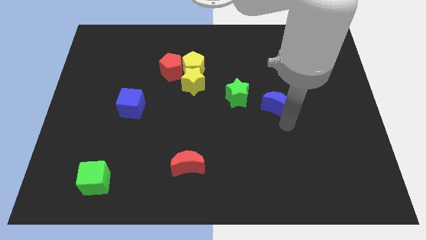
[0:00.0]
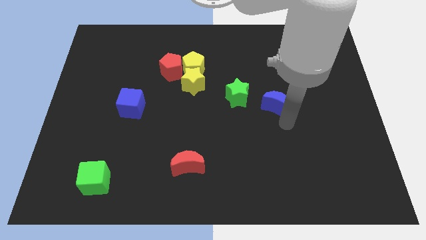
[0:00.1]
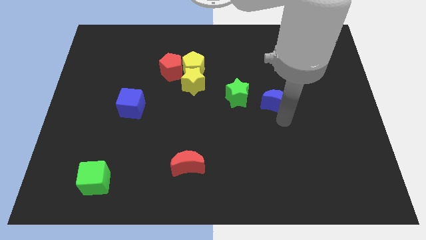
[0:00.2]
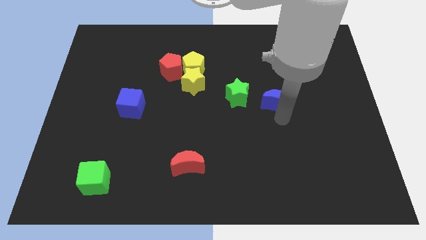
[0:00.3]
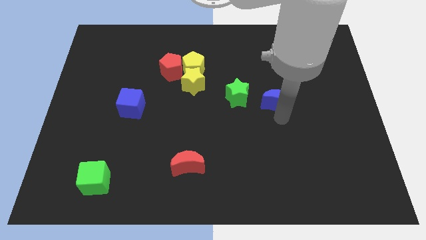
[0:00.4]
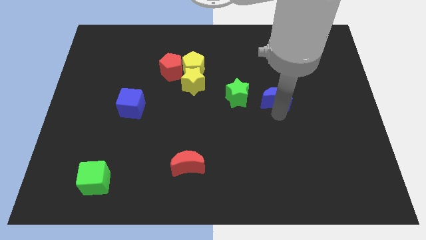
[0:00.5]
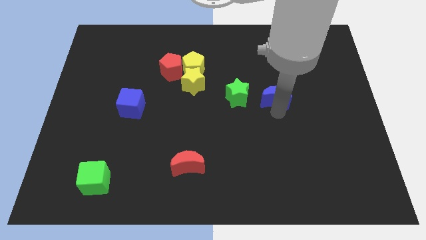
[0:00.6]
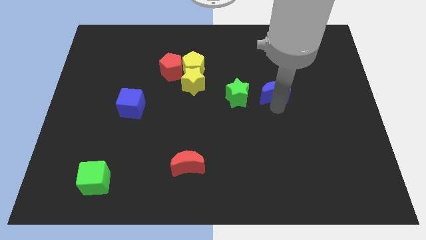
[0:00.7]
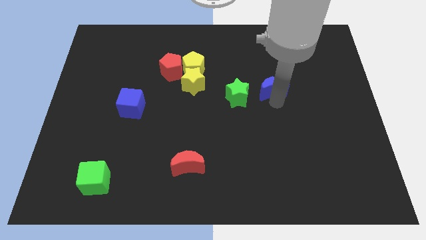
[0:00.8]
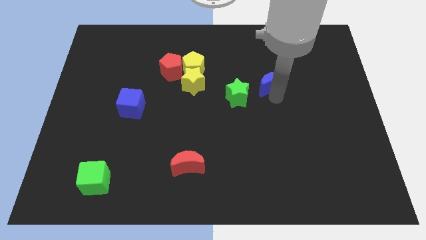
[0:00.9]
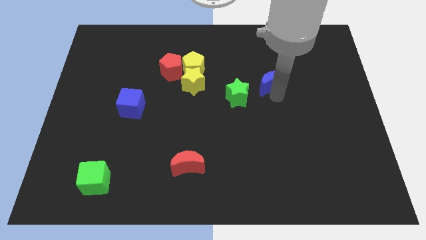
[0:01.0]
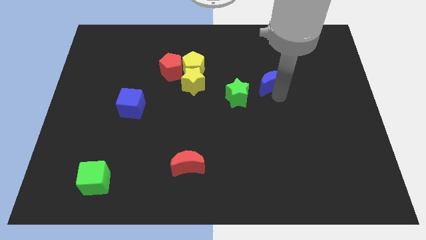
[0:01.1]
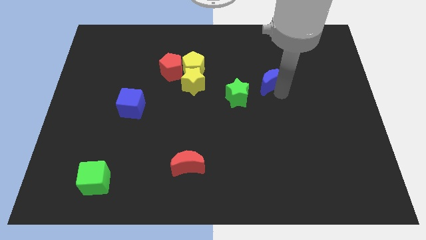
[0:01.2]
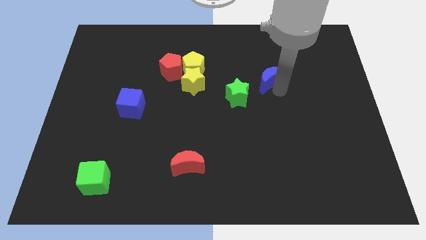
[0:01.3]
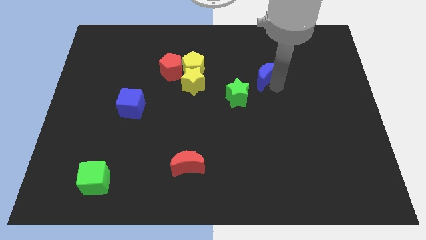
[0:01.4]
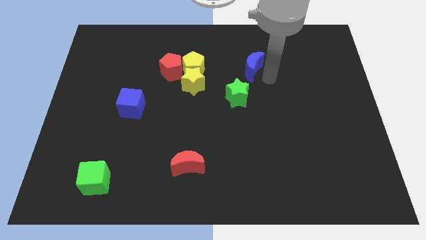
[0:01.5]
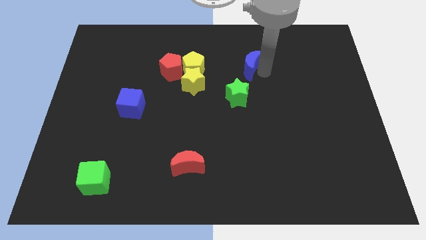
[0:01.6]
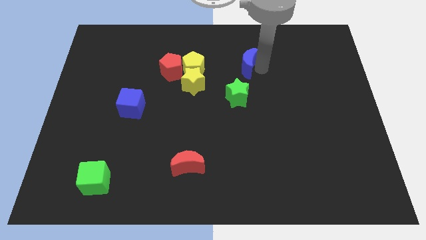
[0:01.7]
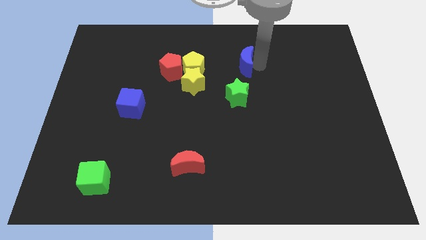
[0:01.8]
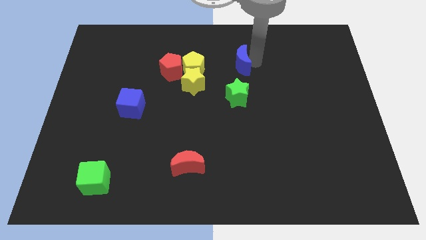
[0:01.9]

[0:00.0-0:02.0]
move the blue crescent to the top side of the green star

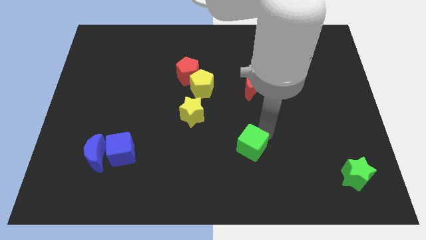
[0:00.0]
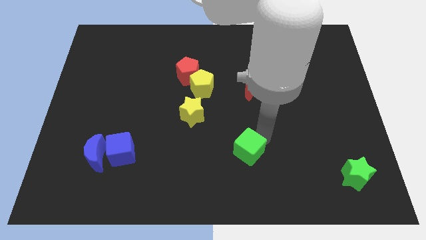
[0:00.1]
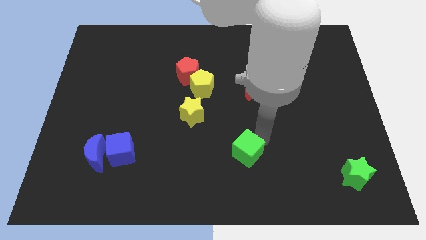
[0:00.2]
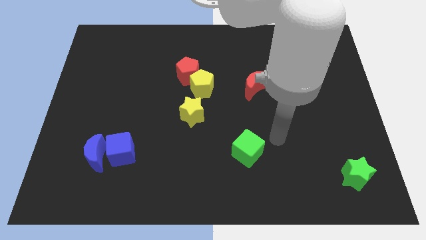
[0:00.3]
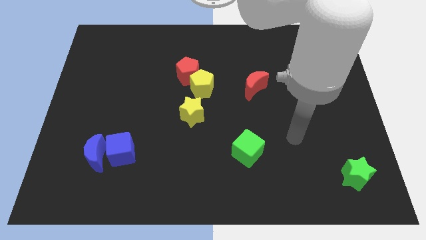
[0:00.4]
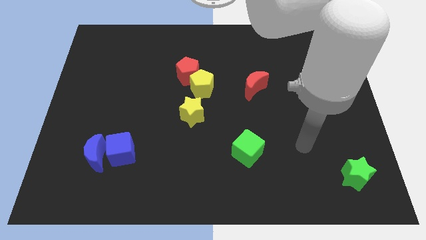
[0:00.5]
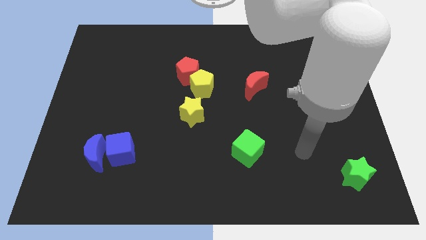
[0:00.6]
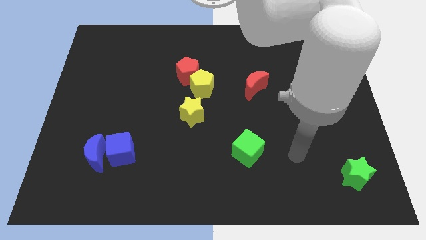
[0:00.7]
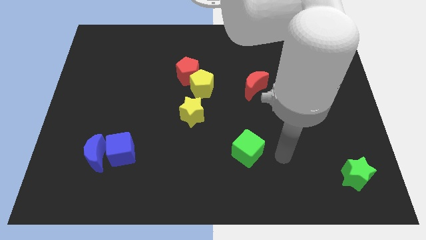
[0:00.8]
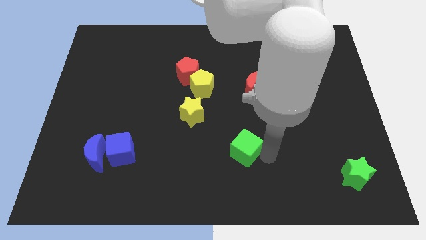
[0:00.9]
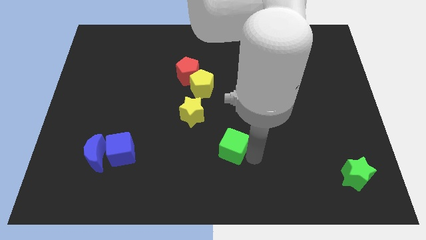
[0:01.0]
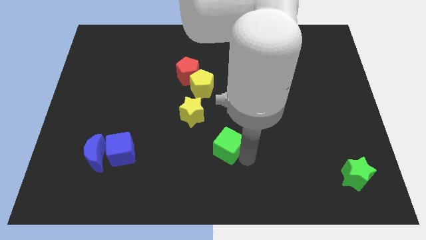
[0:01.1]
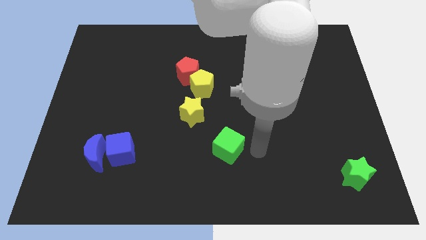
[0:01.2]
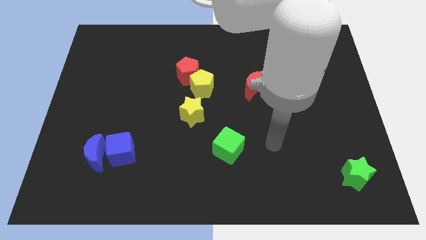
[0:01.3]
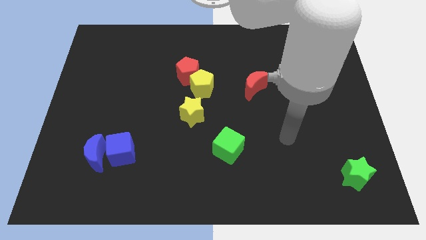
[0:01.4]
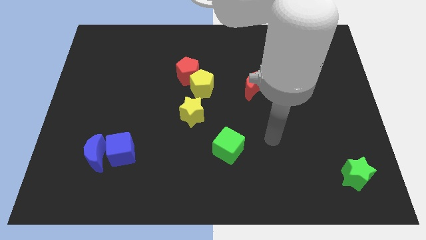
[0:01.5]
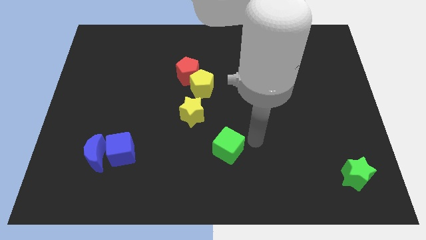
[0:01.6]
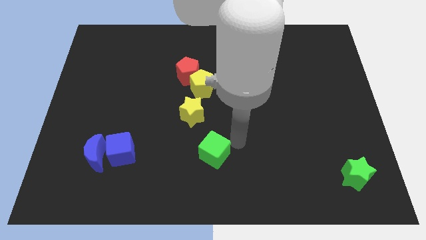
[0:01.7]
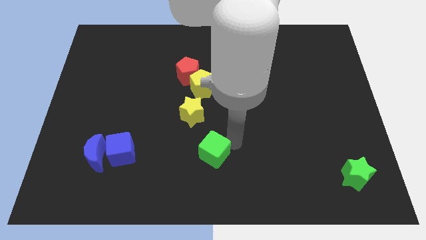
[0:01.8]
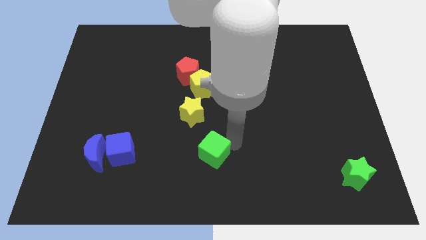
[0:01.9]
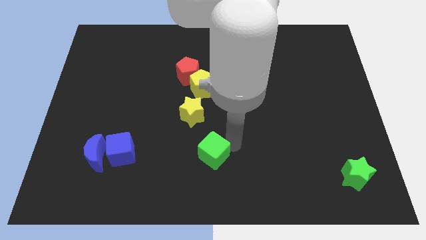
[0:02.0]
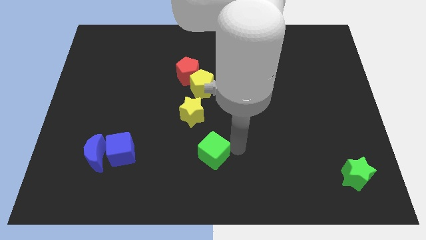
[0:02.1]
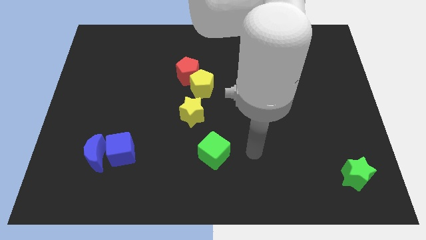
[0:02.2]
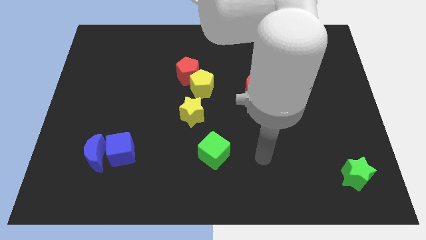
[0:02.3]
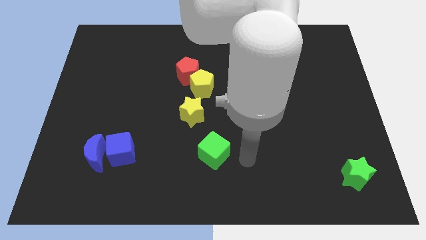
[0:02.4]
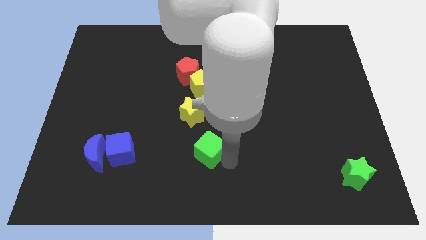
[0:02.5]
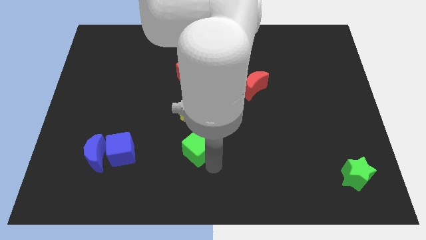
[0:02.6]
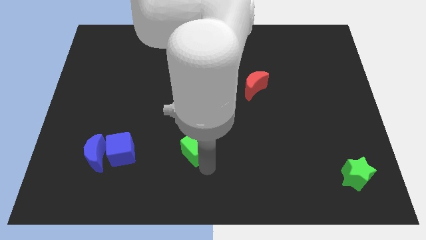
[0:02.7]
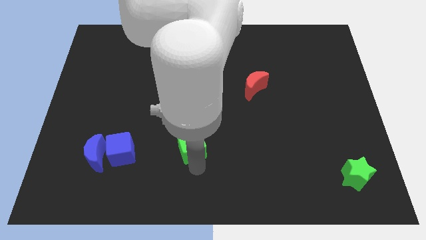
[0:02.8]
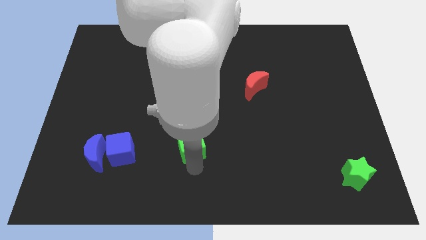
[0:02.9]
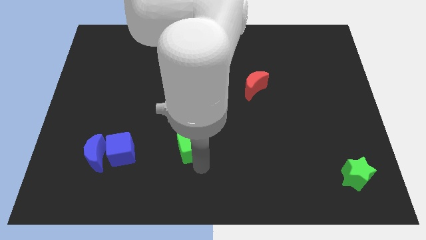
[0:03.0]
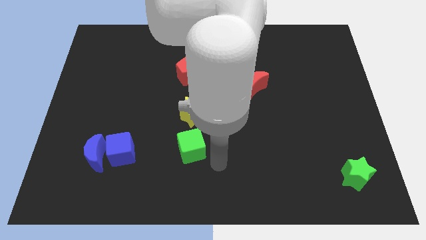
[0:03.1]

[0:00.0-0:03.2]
push the green cube to the bottom of the yellow star

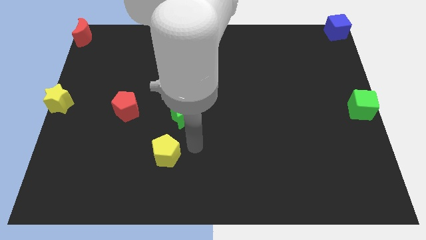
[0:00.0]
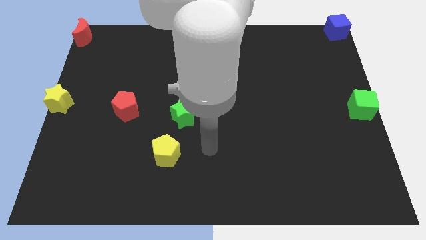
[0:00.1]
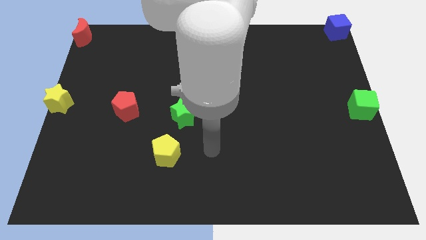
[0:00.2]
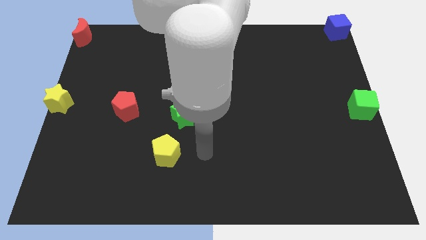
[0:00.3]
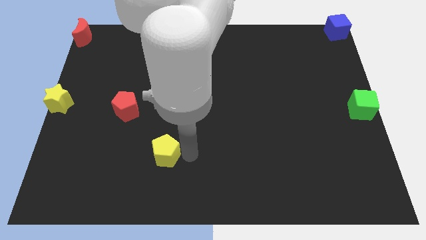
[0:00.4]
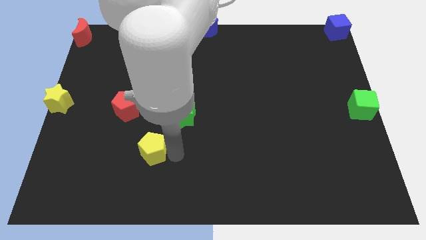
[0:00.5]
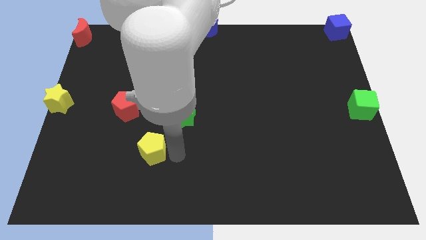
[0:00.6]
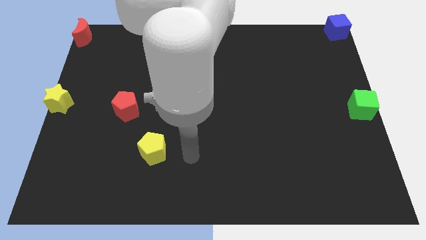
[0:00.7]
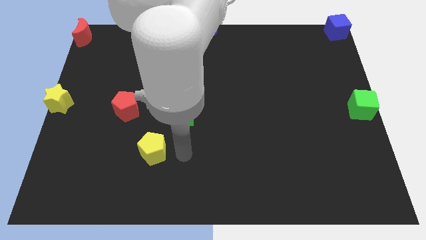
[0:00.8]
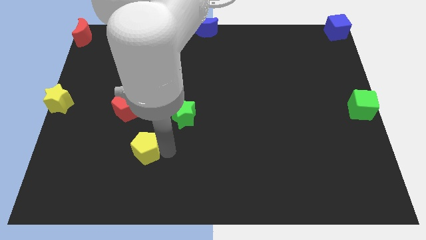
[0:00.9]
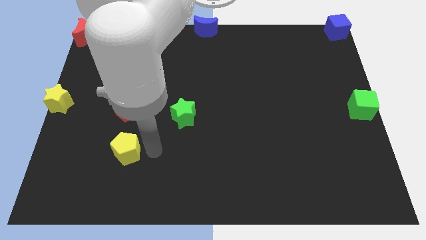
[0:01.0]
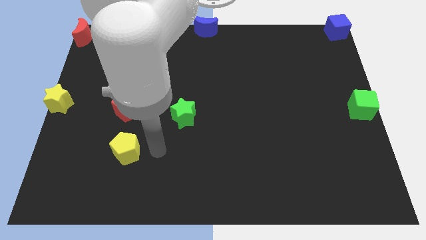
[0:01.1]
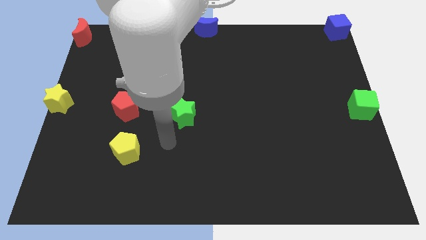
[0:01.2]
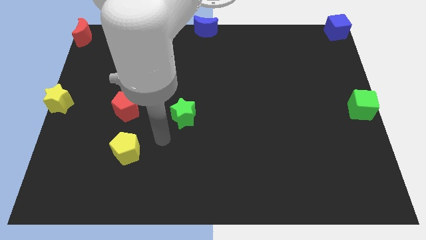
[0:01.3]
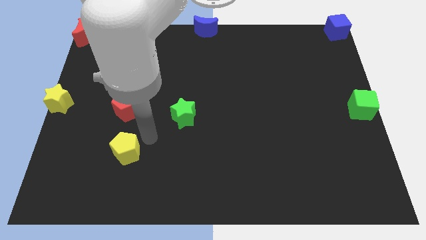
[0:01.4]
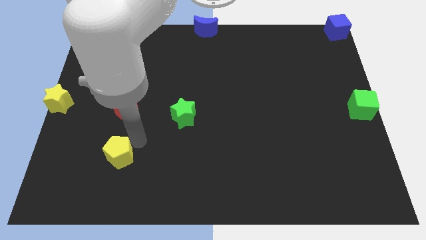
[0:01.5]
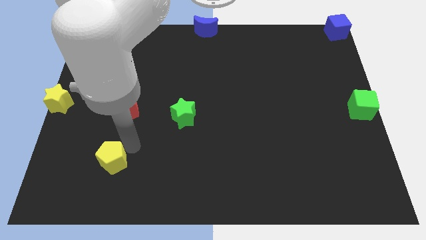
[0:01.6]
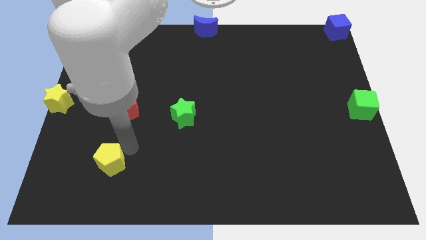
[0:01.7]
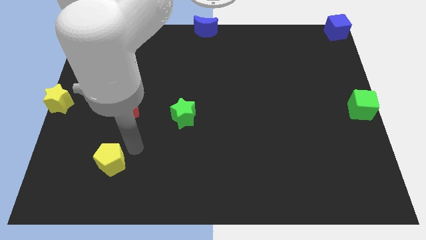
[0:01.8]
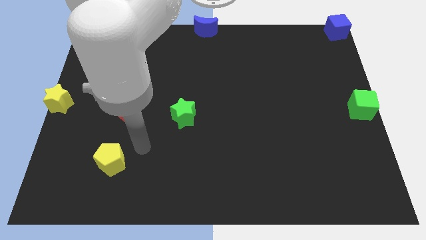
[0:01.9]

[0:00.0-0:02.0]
push the yellow pentagon towards the left

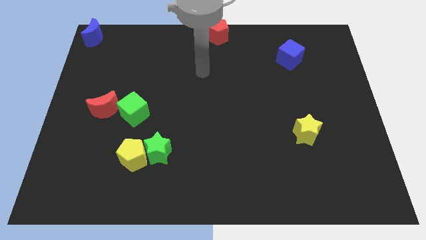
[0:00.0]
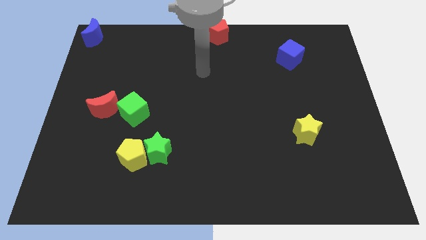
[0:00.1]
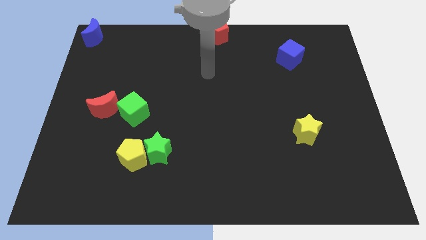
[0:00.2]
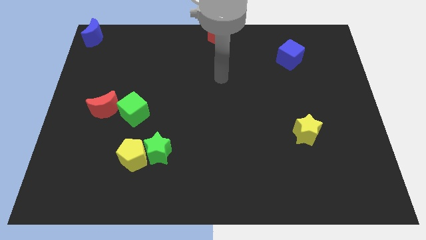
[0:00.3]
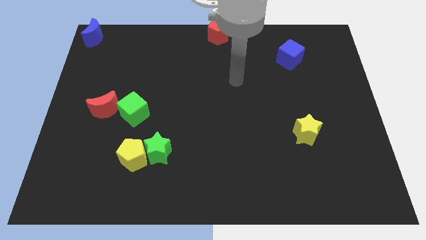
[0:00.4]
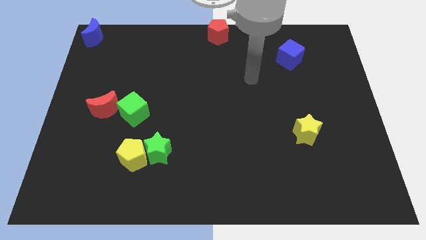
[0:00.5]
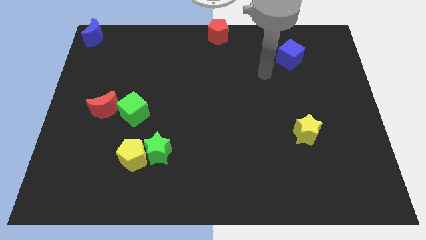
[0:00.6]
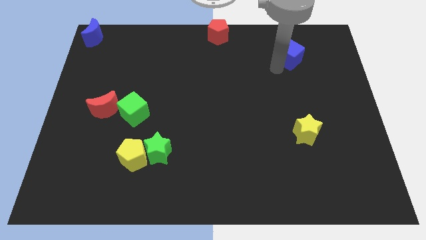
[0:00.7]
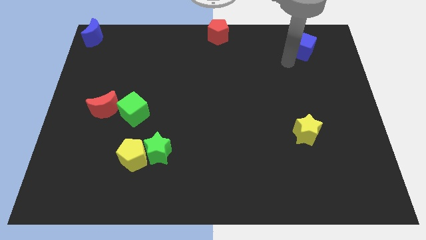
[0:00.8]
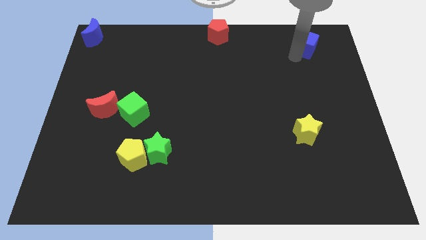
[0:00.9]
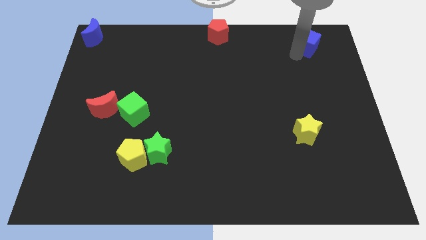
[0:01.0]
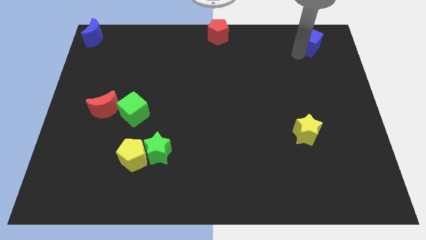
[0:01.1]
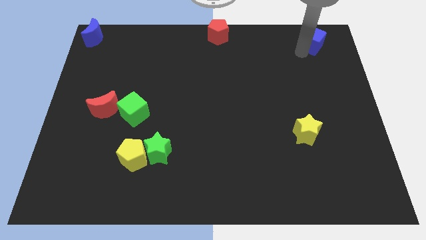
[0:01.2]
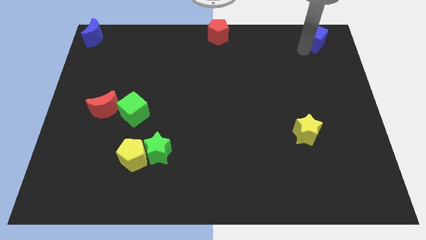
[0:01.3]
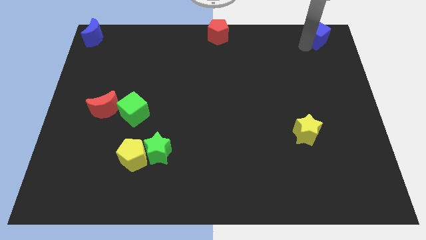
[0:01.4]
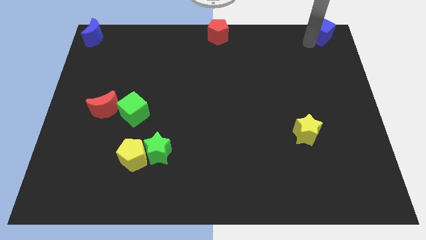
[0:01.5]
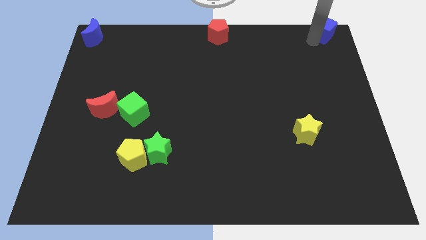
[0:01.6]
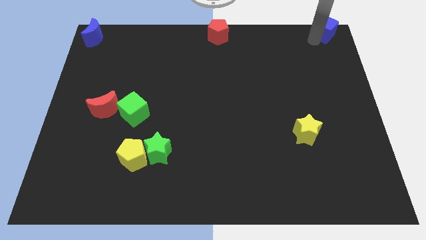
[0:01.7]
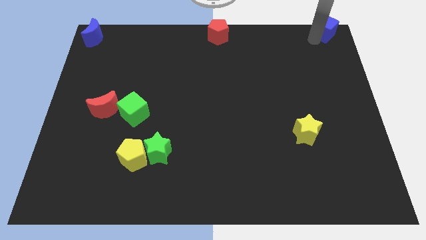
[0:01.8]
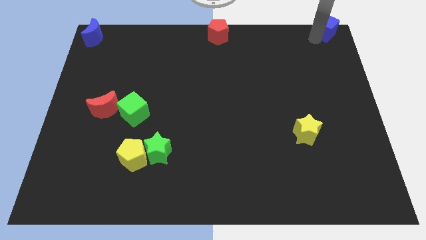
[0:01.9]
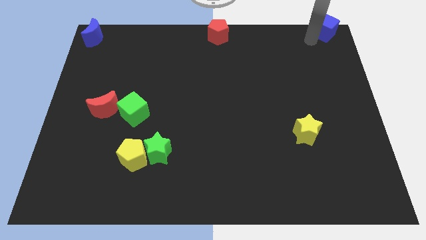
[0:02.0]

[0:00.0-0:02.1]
slide the blue cube towards the top right corner
